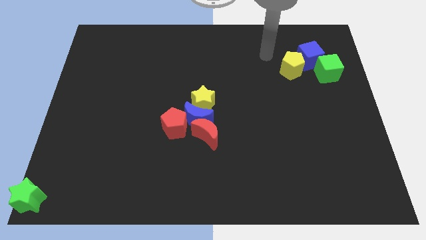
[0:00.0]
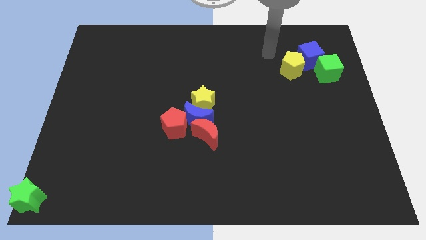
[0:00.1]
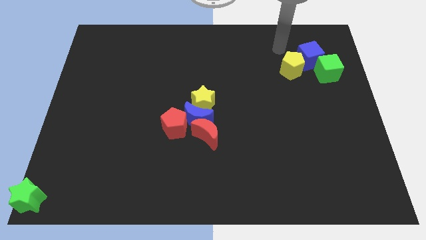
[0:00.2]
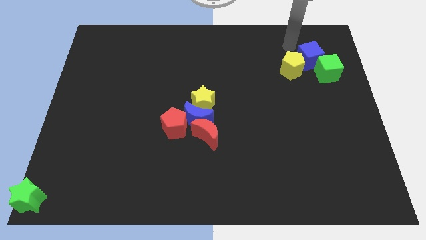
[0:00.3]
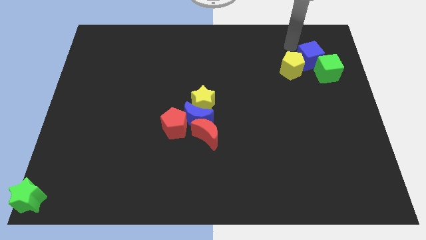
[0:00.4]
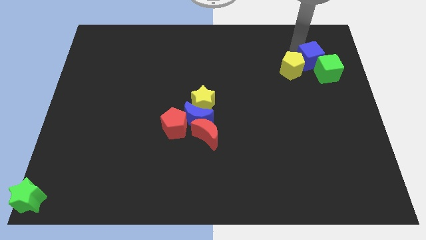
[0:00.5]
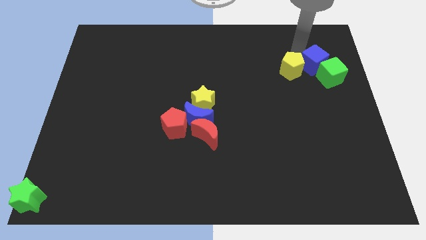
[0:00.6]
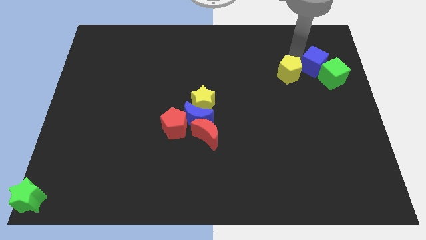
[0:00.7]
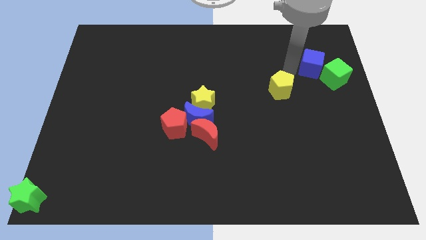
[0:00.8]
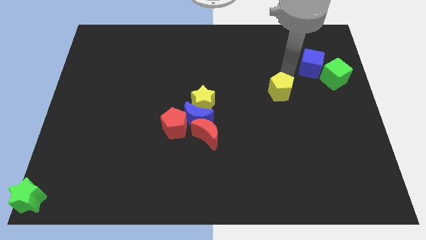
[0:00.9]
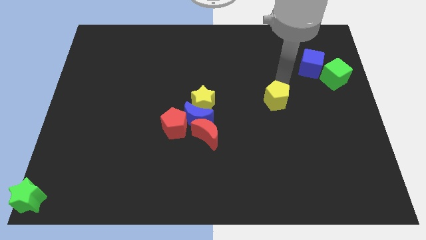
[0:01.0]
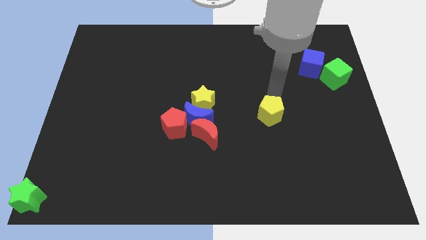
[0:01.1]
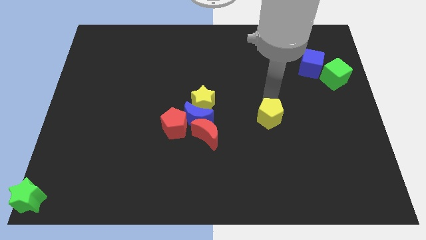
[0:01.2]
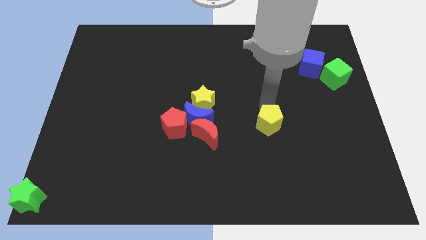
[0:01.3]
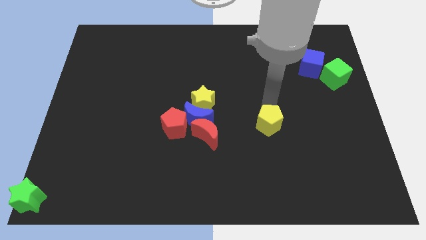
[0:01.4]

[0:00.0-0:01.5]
separate the yellow pentagon from blue cube

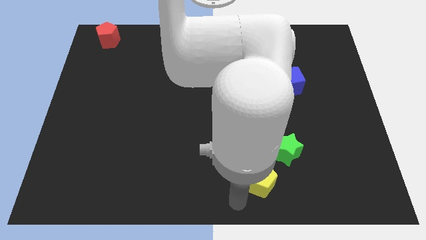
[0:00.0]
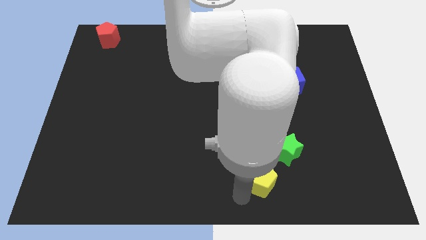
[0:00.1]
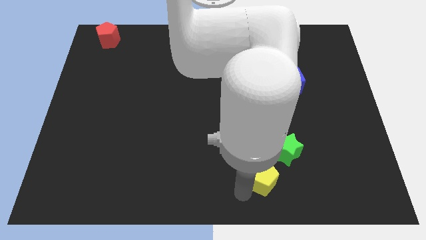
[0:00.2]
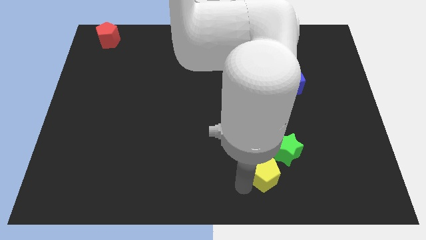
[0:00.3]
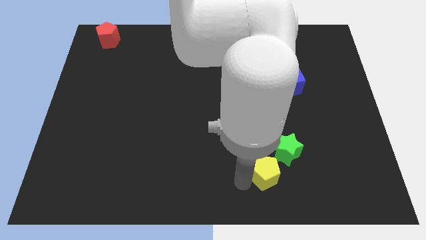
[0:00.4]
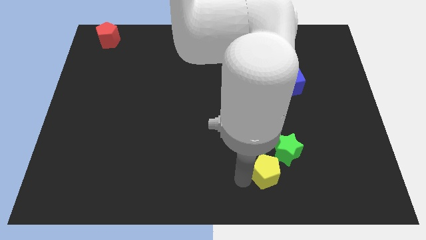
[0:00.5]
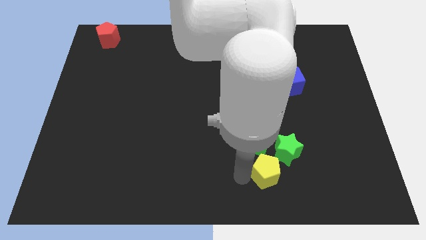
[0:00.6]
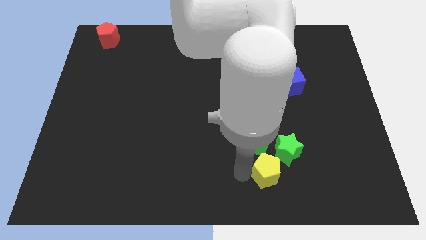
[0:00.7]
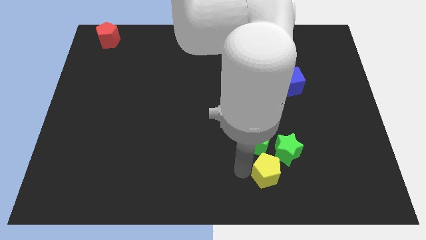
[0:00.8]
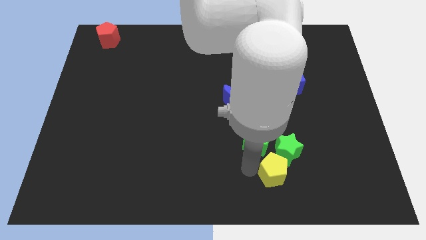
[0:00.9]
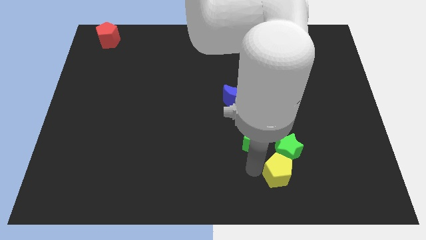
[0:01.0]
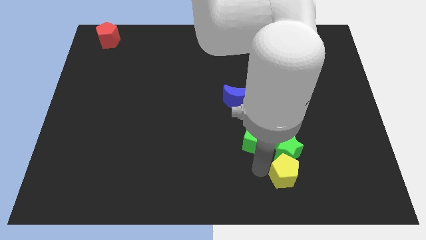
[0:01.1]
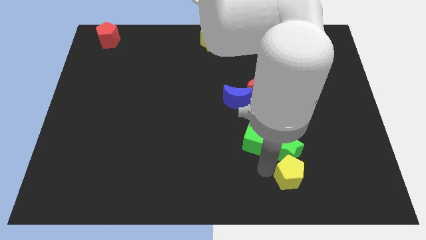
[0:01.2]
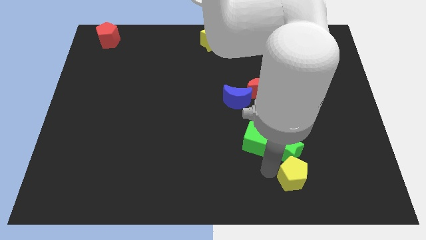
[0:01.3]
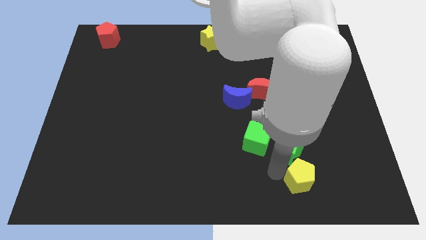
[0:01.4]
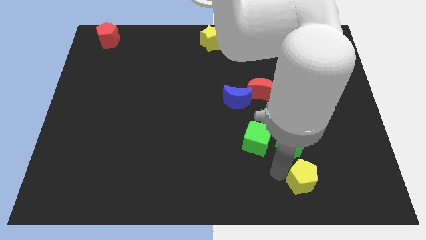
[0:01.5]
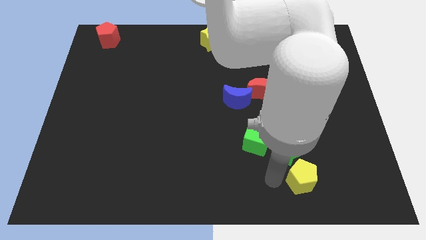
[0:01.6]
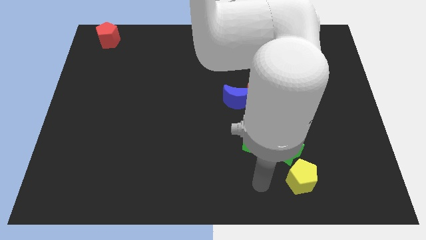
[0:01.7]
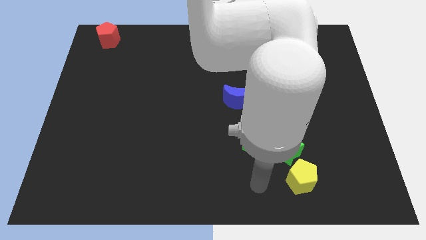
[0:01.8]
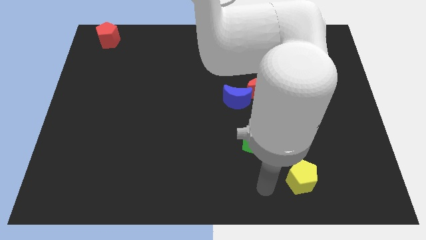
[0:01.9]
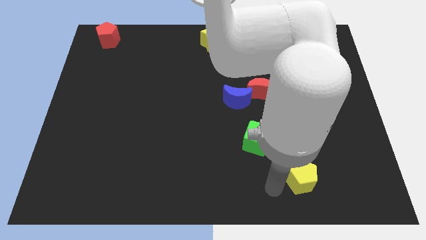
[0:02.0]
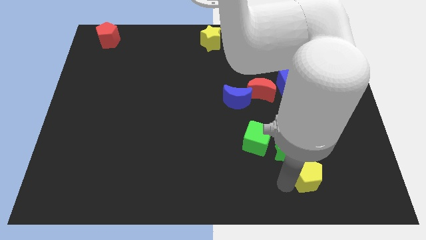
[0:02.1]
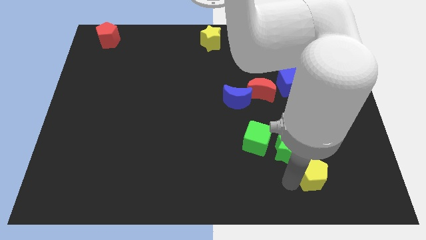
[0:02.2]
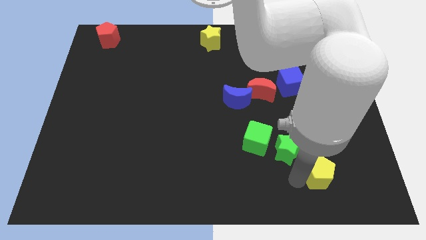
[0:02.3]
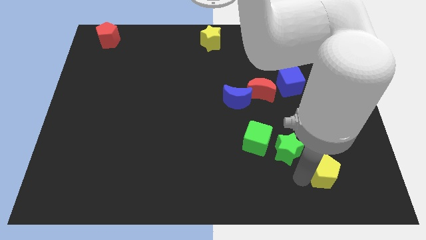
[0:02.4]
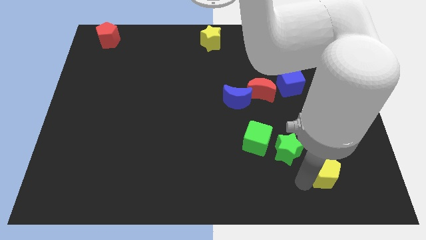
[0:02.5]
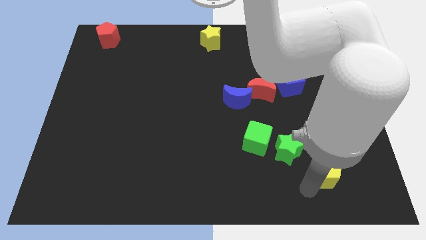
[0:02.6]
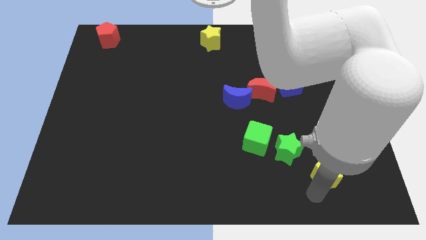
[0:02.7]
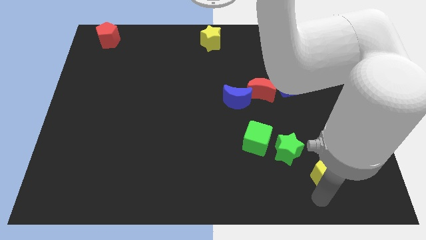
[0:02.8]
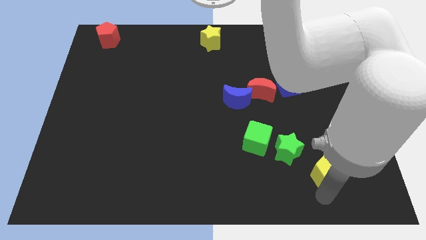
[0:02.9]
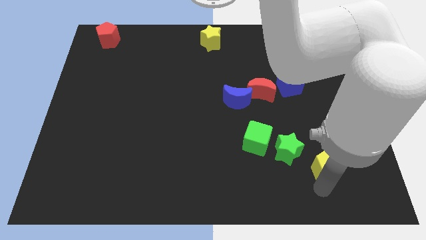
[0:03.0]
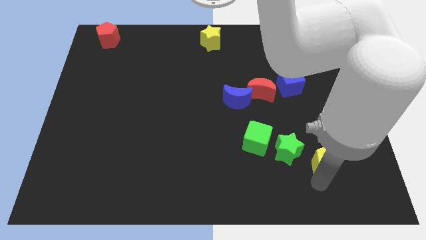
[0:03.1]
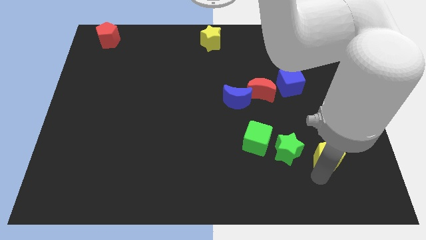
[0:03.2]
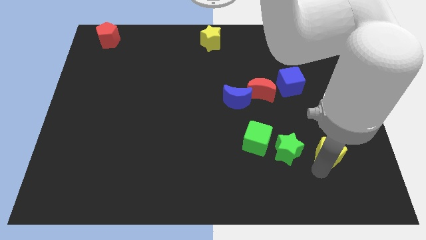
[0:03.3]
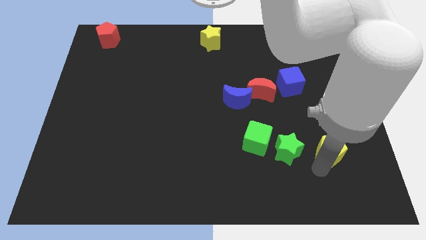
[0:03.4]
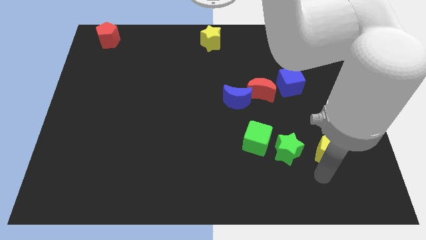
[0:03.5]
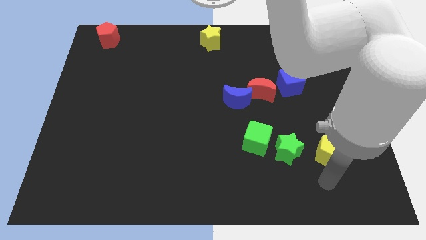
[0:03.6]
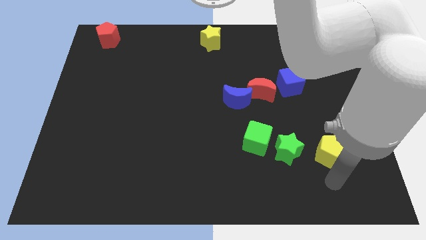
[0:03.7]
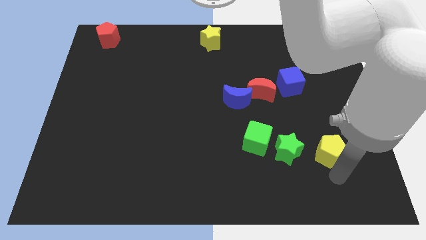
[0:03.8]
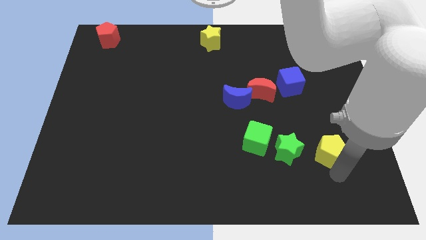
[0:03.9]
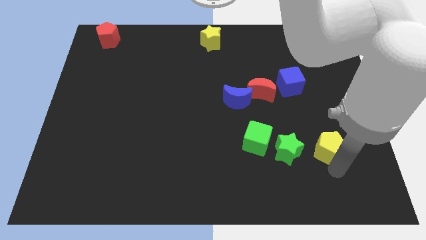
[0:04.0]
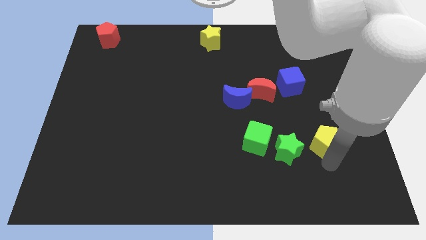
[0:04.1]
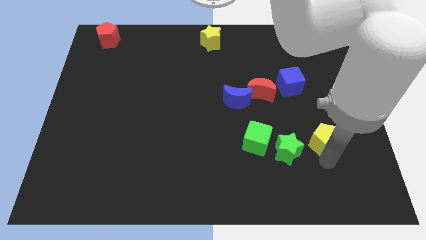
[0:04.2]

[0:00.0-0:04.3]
place yellow pentagon on right to green star

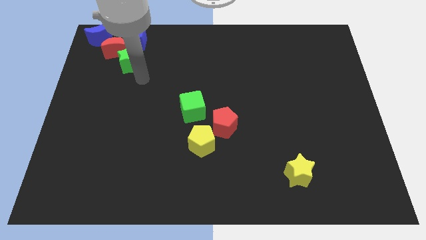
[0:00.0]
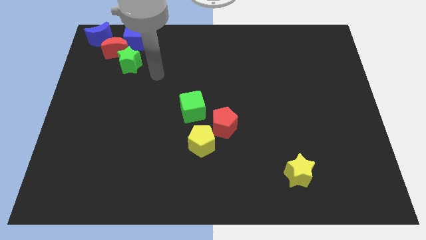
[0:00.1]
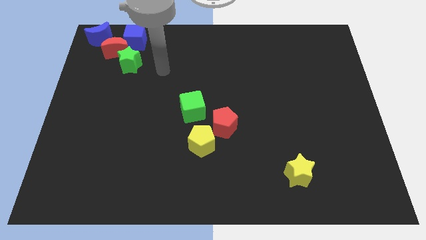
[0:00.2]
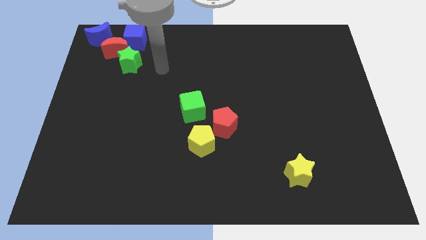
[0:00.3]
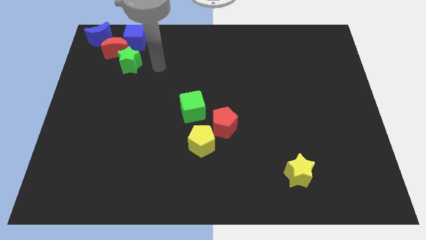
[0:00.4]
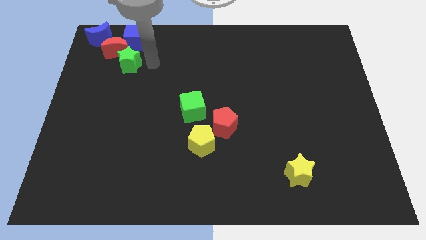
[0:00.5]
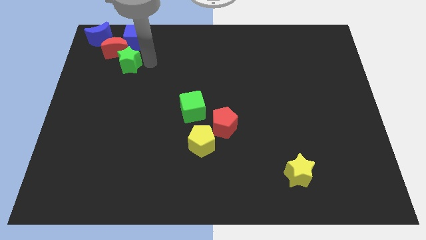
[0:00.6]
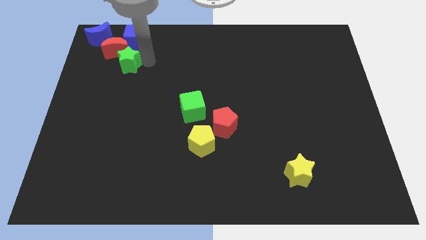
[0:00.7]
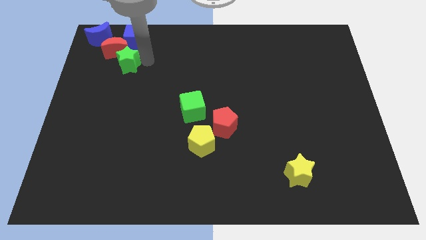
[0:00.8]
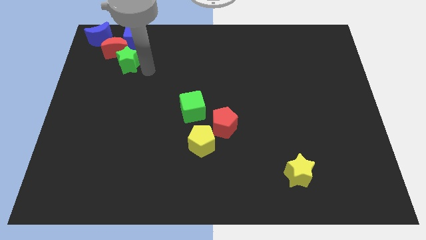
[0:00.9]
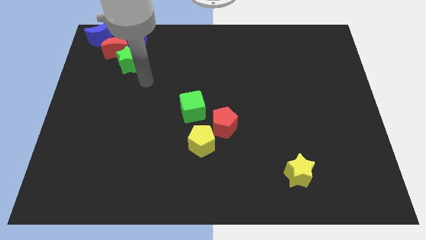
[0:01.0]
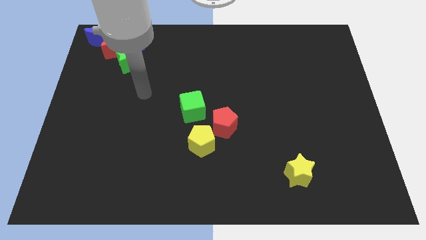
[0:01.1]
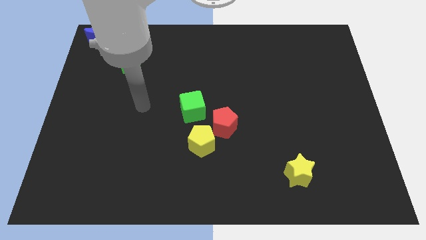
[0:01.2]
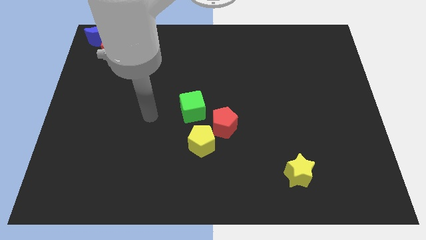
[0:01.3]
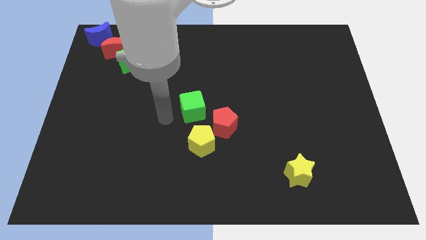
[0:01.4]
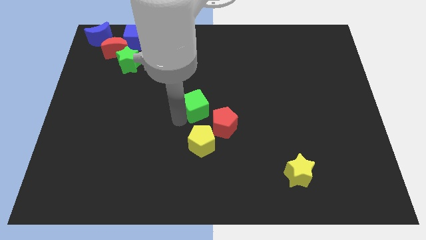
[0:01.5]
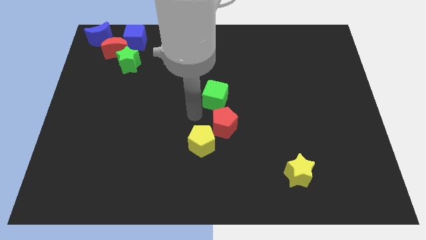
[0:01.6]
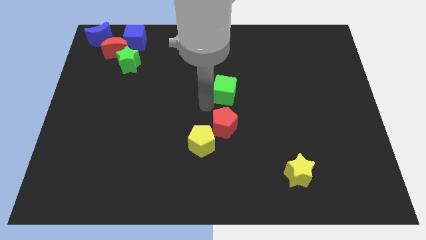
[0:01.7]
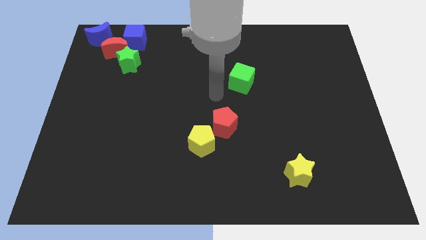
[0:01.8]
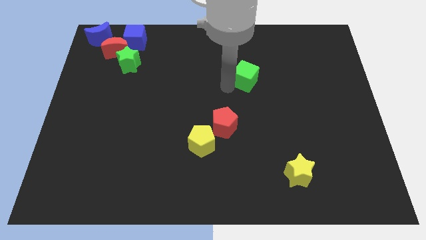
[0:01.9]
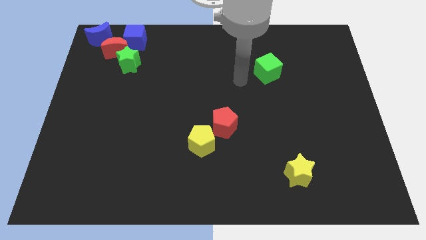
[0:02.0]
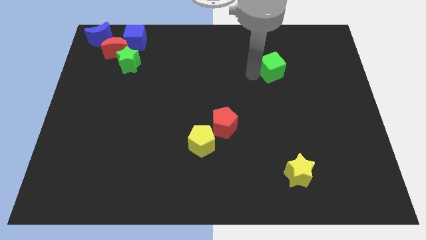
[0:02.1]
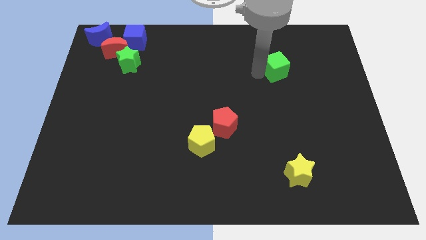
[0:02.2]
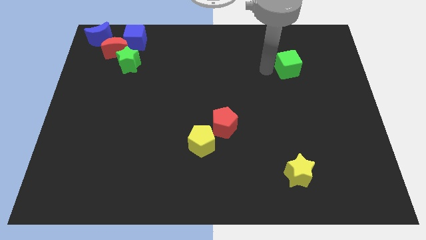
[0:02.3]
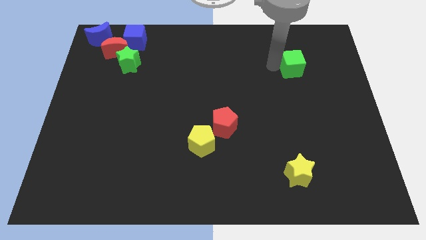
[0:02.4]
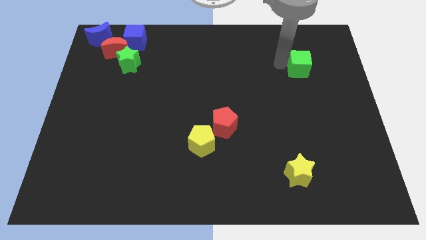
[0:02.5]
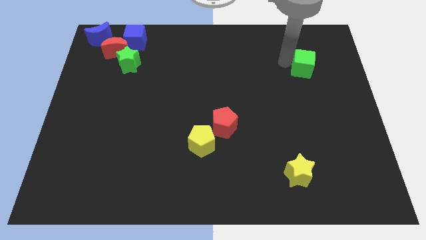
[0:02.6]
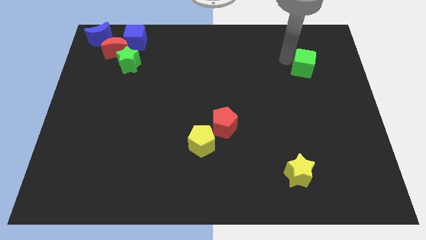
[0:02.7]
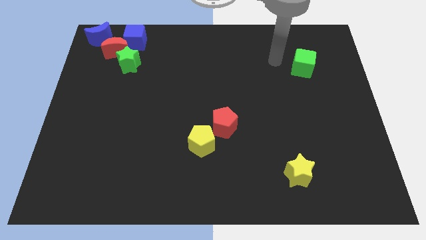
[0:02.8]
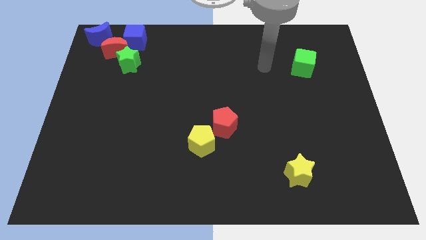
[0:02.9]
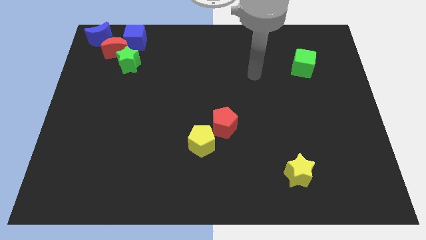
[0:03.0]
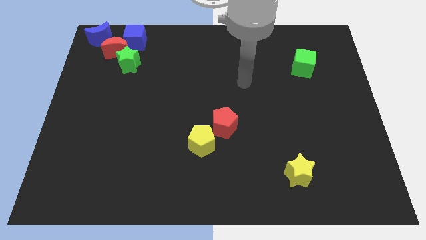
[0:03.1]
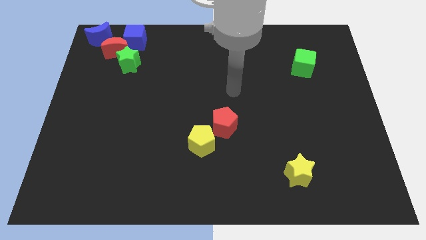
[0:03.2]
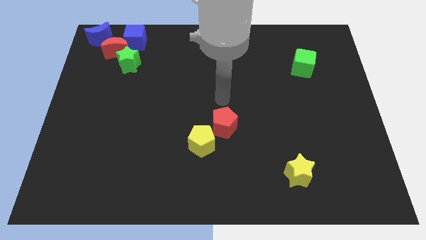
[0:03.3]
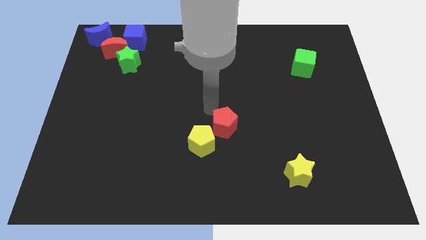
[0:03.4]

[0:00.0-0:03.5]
move the green cube slightly right
